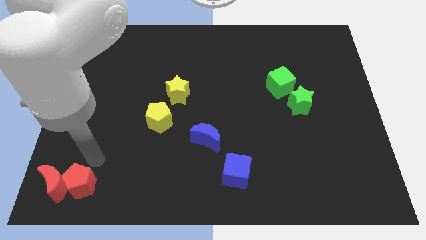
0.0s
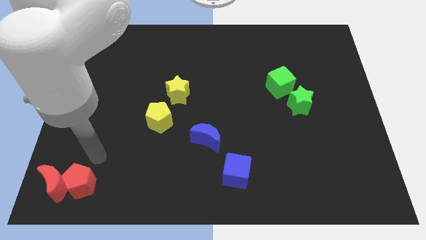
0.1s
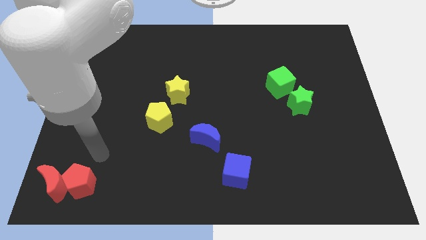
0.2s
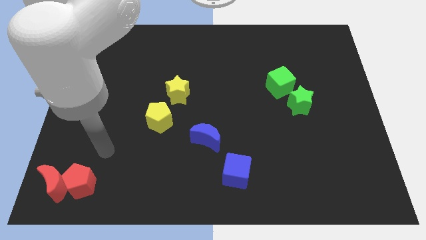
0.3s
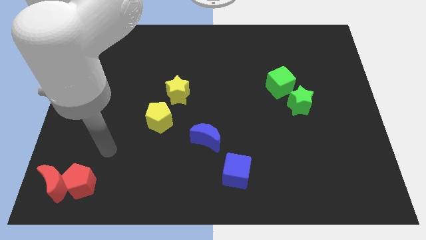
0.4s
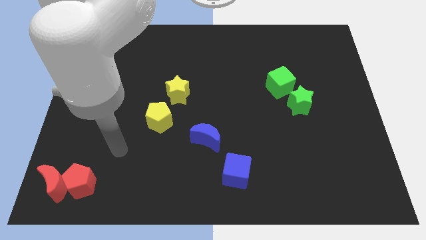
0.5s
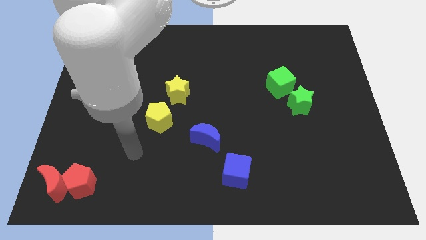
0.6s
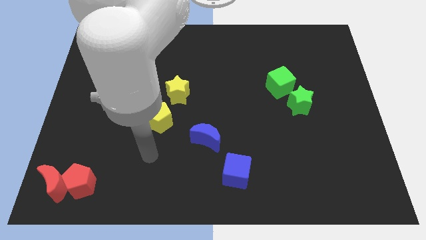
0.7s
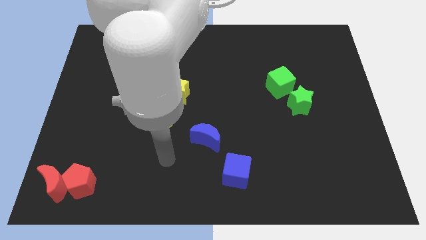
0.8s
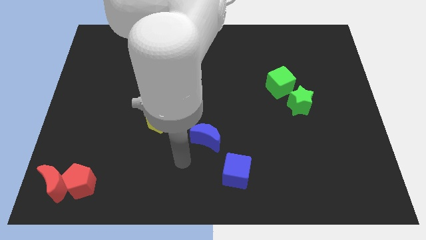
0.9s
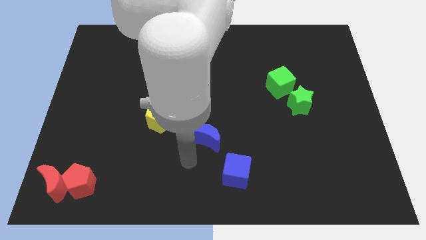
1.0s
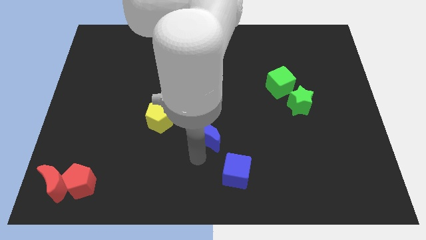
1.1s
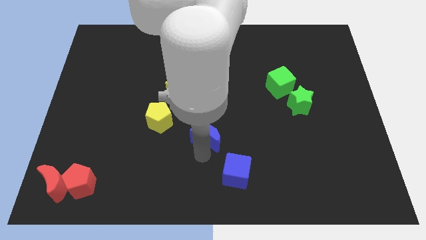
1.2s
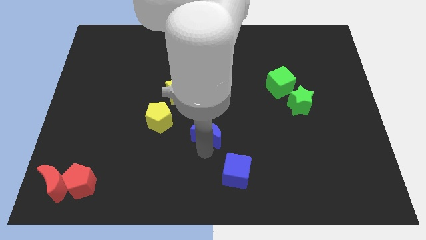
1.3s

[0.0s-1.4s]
tap the blue crescent

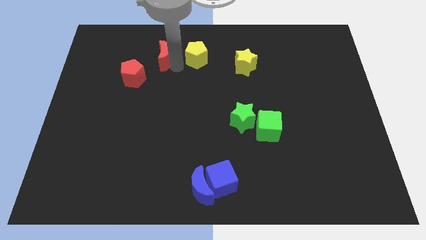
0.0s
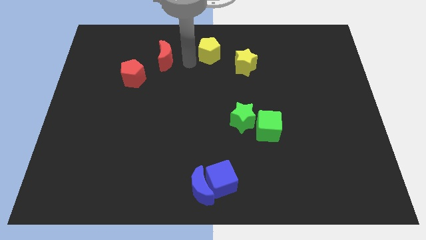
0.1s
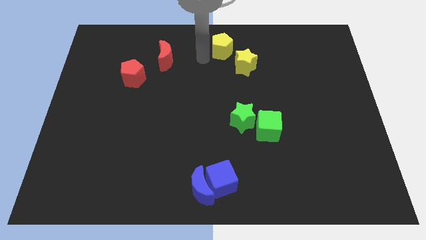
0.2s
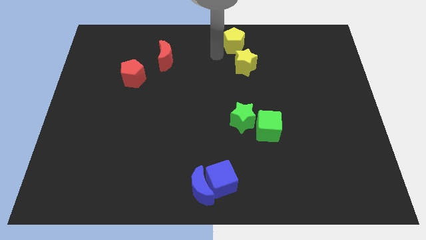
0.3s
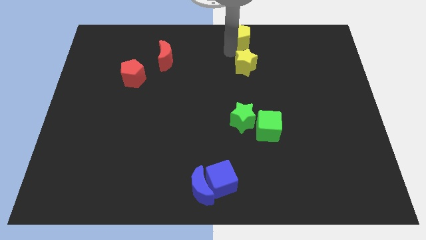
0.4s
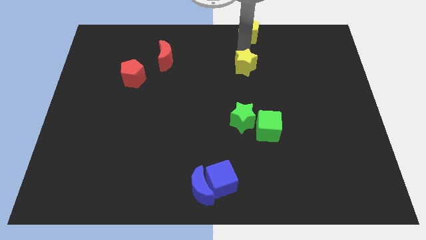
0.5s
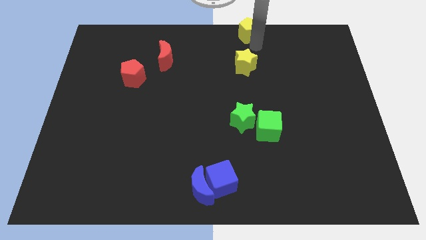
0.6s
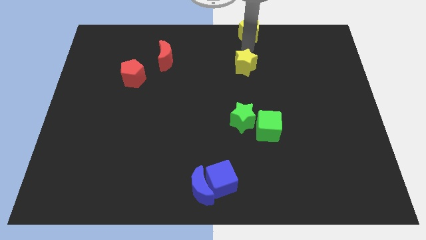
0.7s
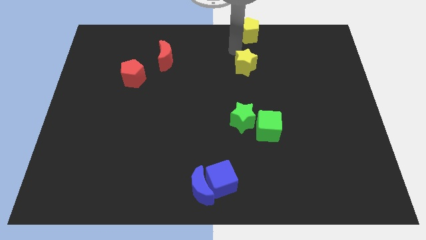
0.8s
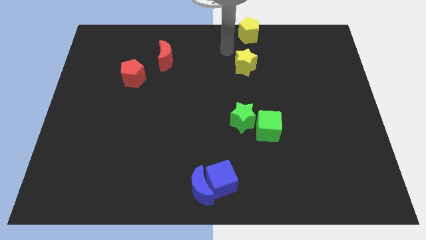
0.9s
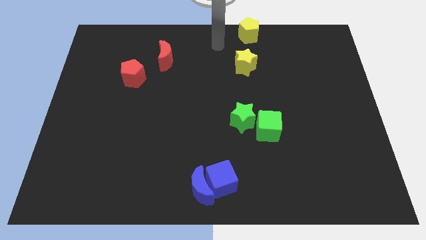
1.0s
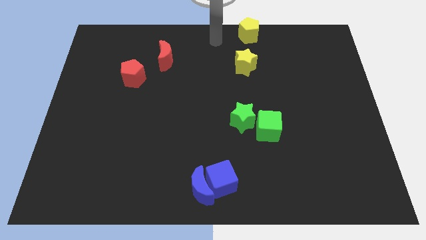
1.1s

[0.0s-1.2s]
place yellow pentagon to the top of yellow star

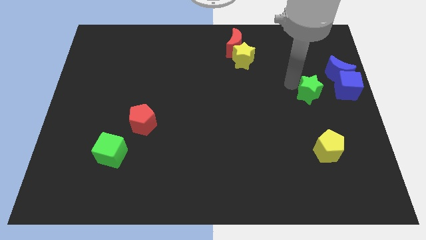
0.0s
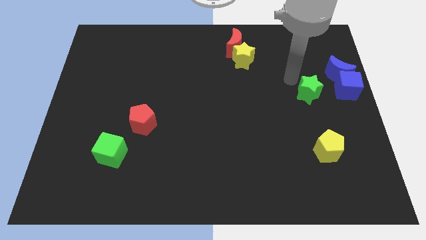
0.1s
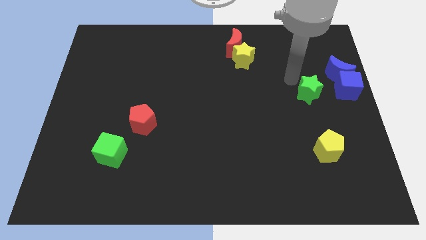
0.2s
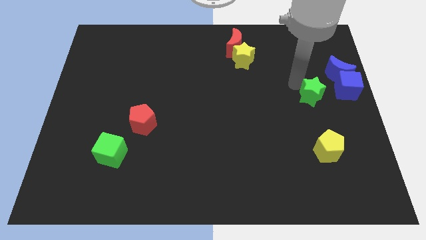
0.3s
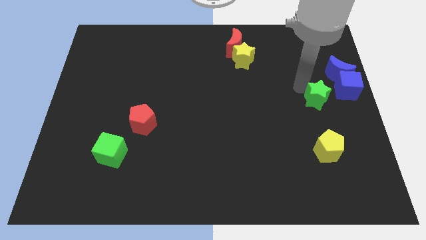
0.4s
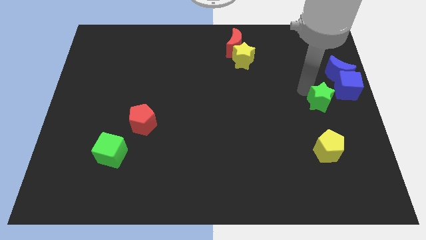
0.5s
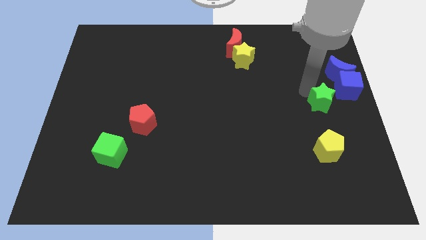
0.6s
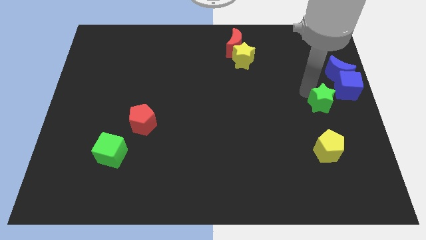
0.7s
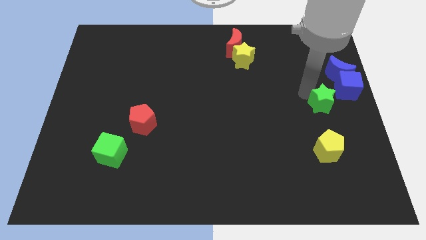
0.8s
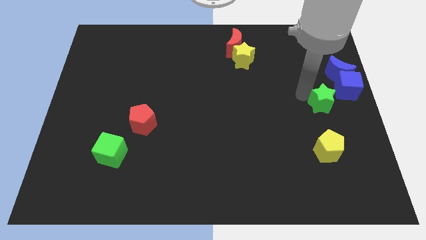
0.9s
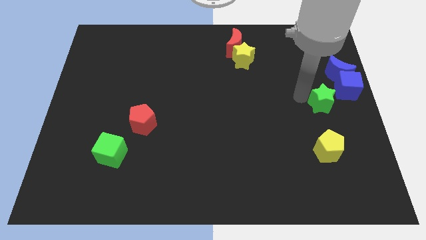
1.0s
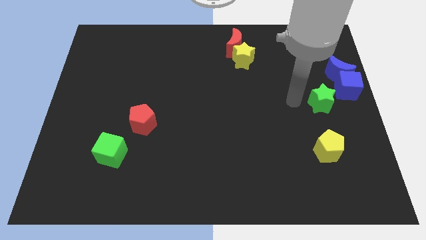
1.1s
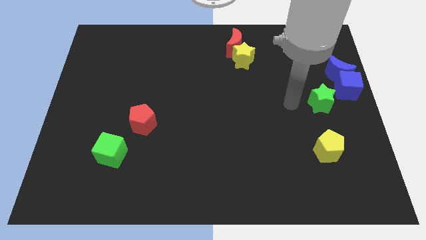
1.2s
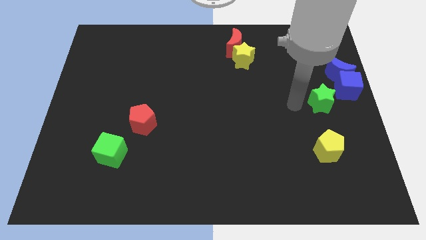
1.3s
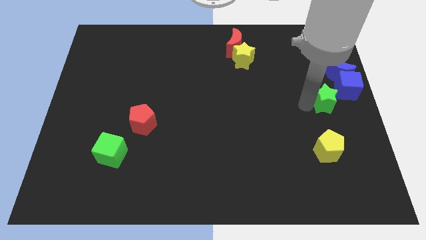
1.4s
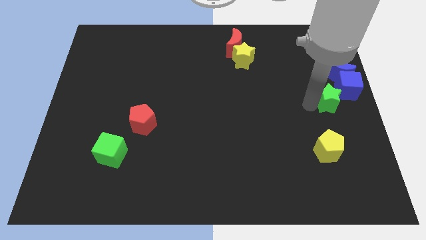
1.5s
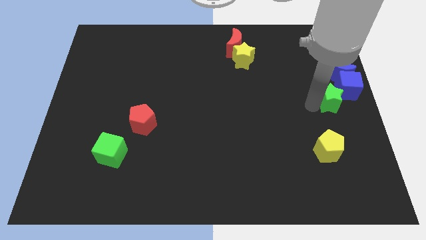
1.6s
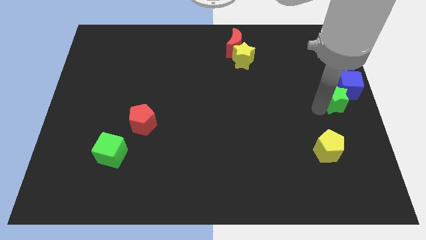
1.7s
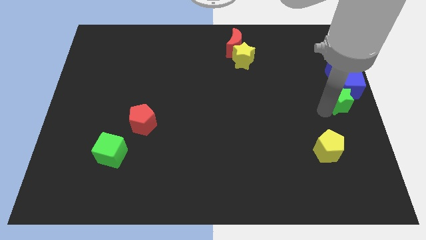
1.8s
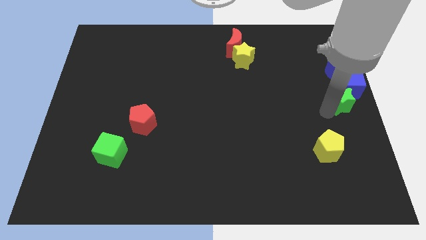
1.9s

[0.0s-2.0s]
push the green star towards the blue cube

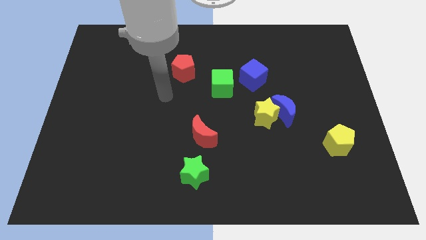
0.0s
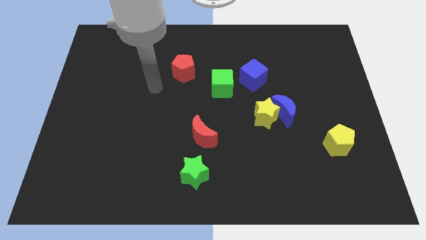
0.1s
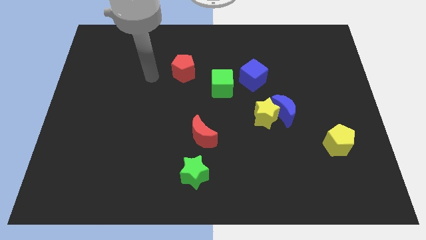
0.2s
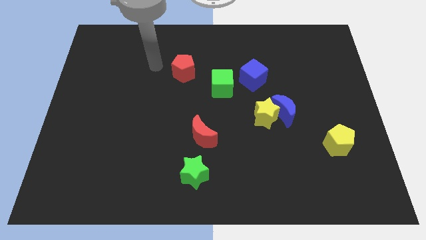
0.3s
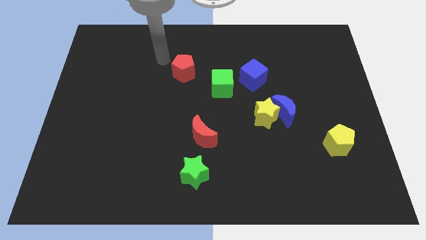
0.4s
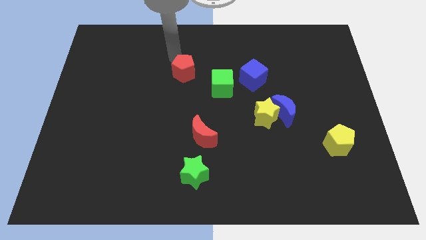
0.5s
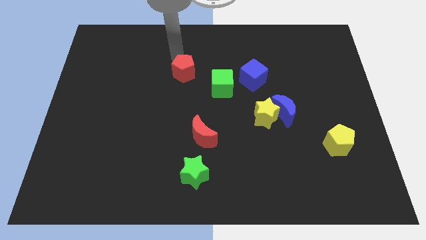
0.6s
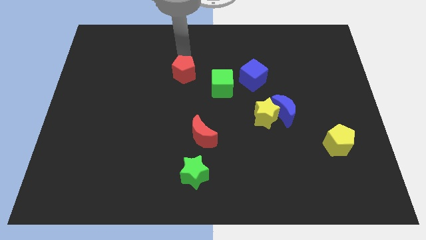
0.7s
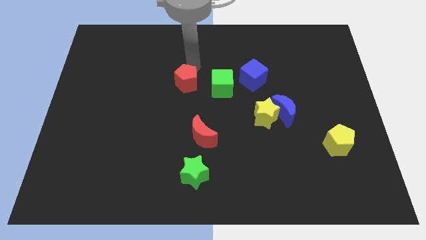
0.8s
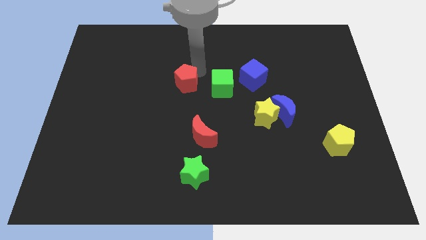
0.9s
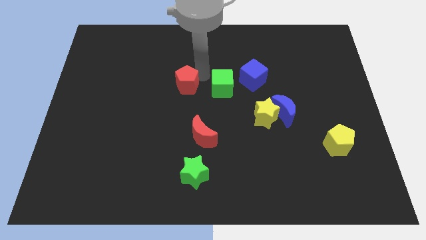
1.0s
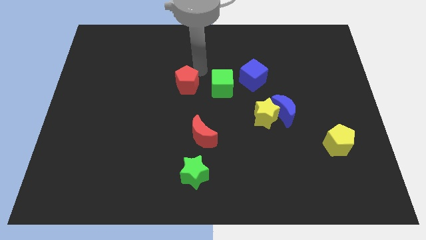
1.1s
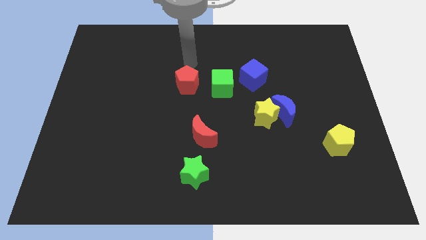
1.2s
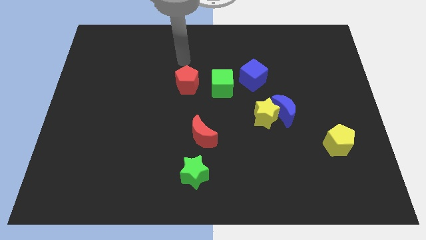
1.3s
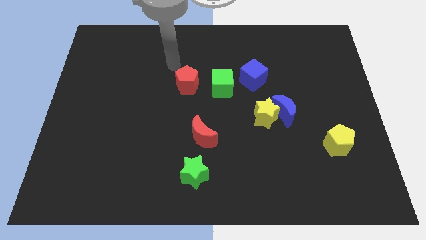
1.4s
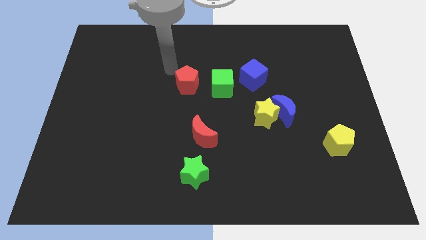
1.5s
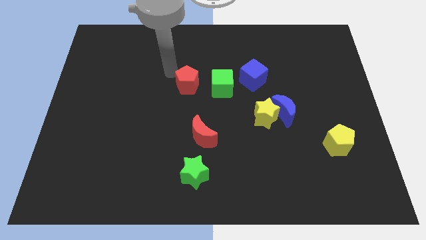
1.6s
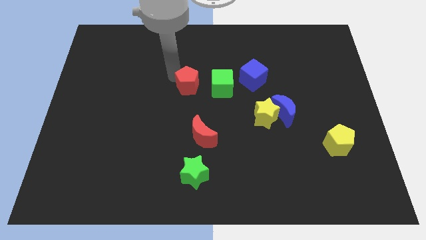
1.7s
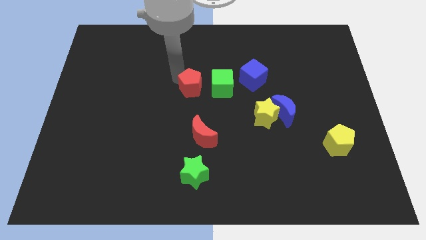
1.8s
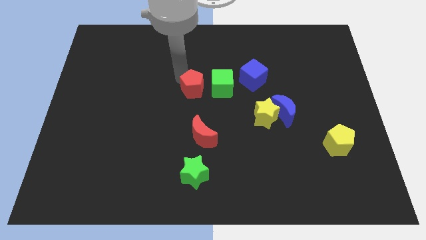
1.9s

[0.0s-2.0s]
move red pentagon left beside the green cube

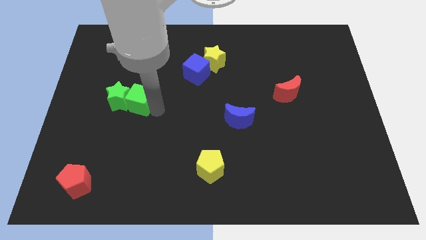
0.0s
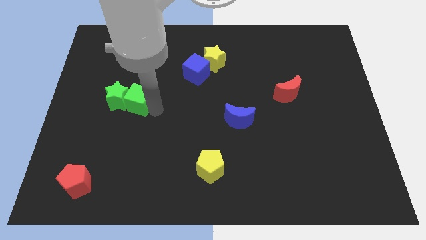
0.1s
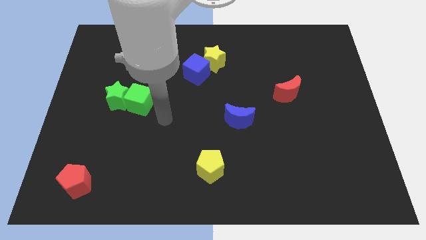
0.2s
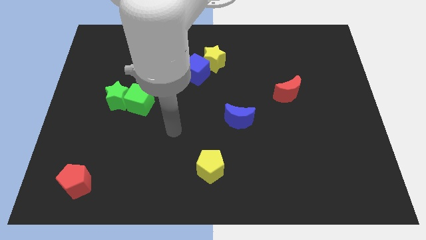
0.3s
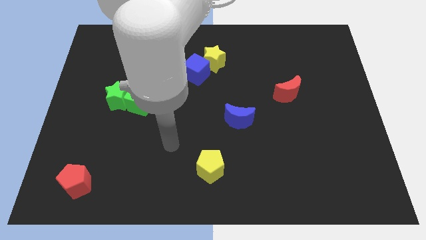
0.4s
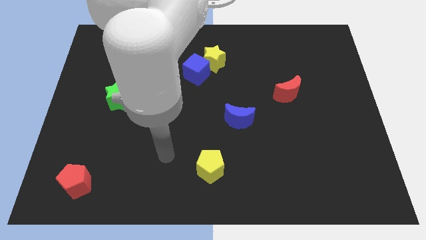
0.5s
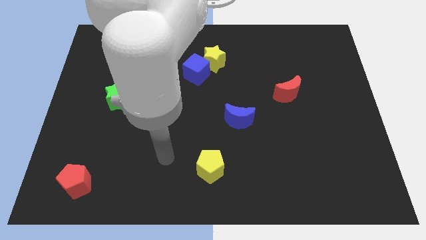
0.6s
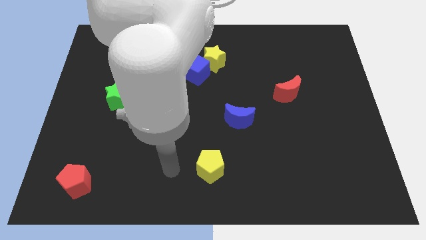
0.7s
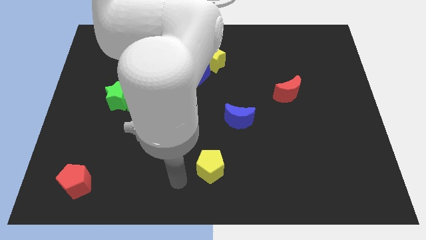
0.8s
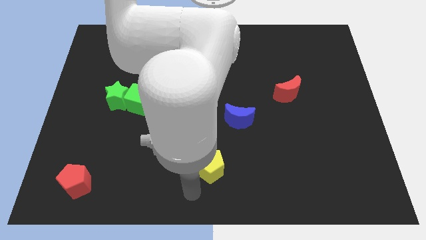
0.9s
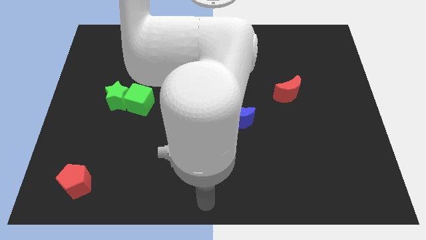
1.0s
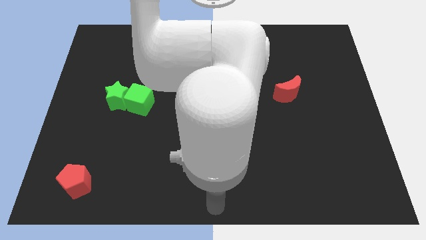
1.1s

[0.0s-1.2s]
move the arm near to the yellow pentagon

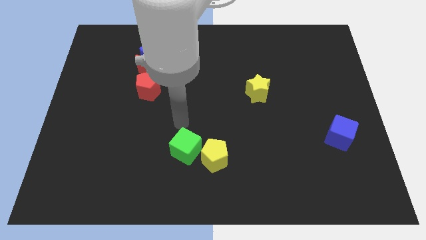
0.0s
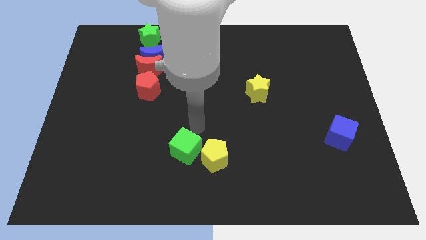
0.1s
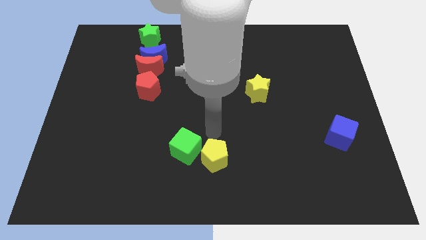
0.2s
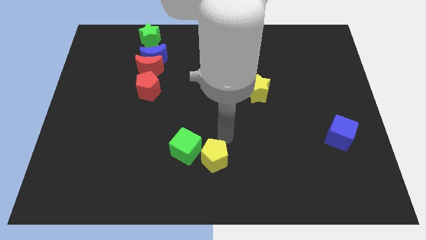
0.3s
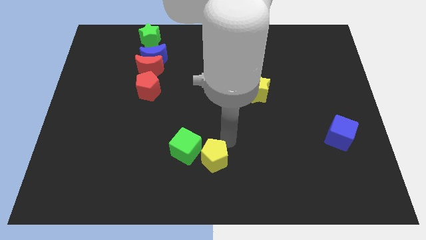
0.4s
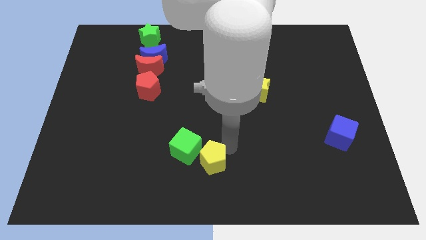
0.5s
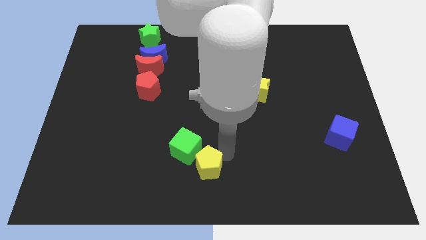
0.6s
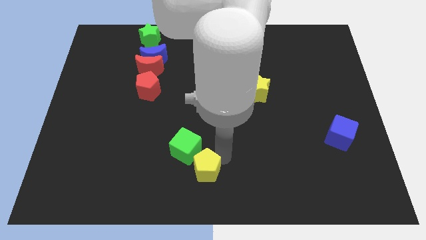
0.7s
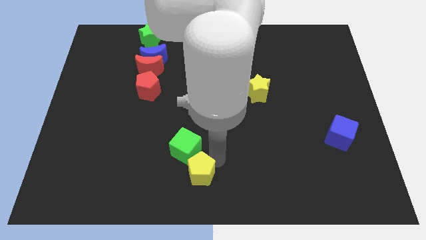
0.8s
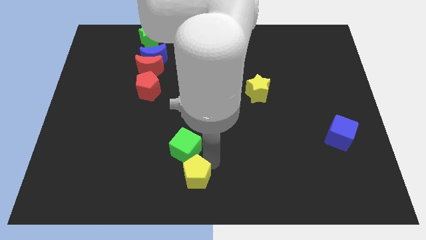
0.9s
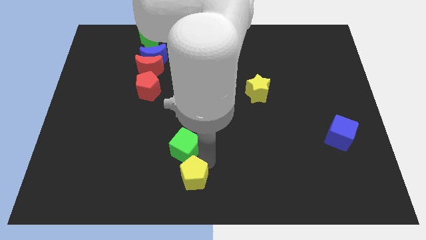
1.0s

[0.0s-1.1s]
place the yellow pentagon below the green cube
